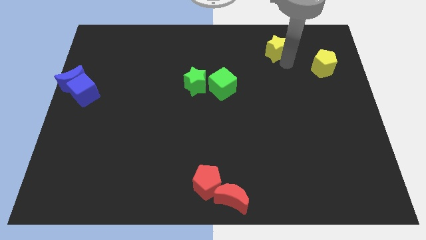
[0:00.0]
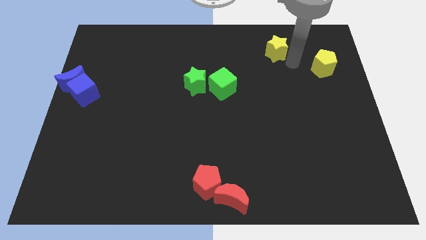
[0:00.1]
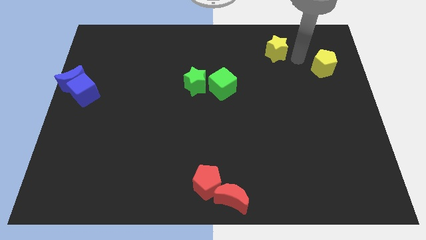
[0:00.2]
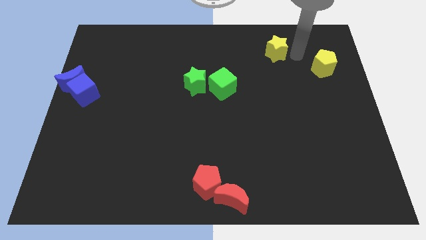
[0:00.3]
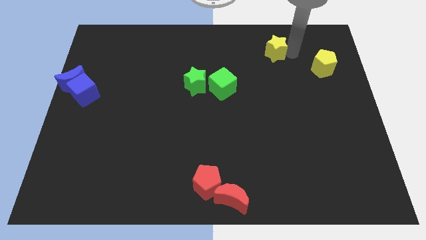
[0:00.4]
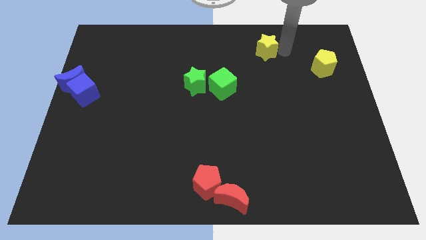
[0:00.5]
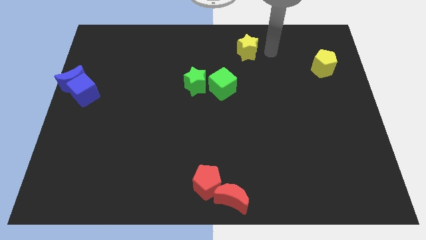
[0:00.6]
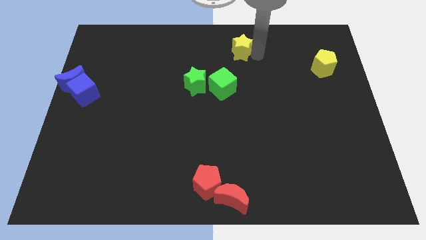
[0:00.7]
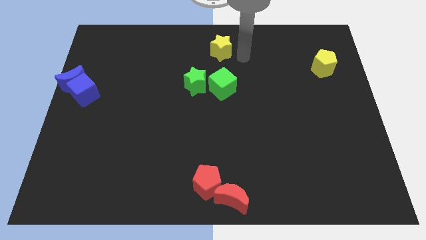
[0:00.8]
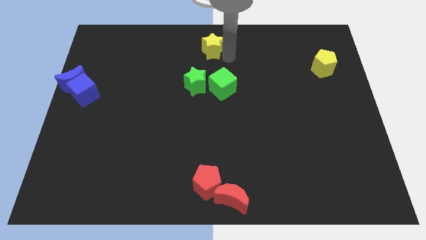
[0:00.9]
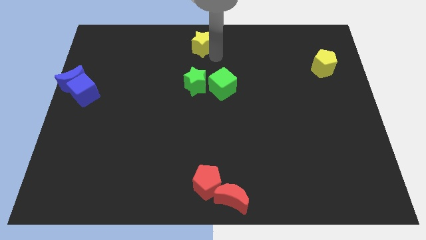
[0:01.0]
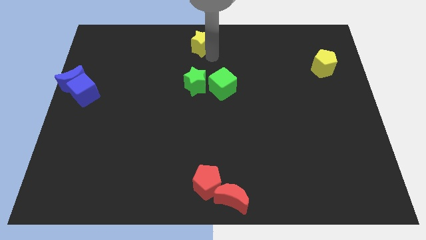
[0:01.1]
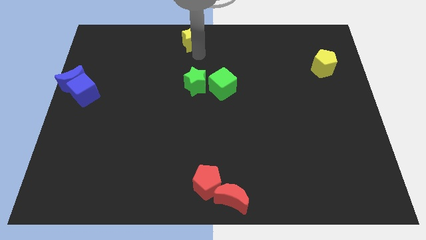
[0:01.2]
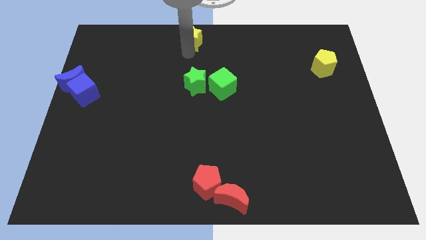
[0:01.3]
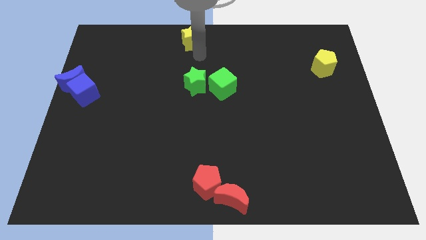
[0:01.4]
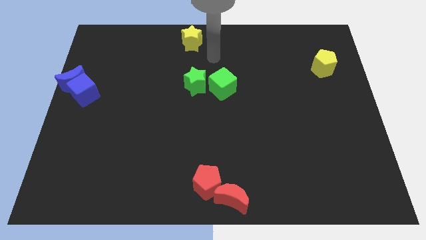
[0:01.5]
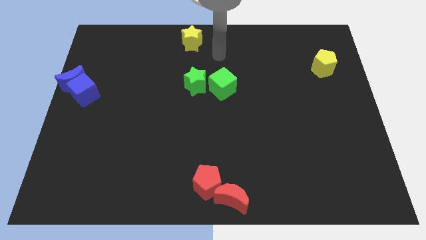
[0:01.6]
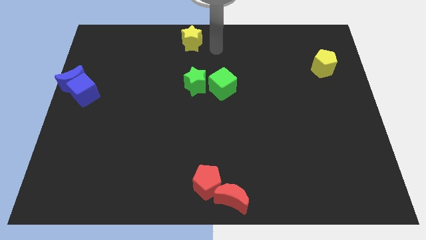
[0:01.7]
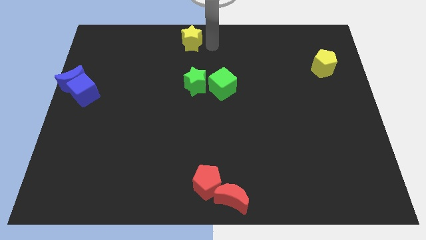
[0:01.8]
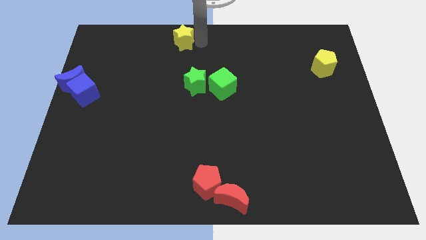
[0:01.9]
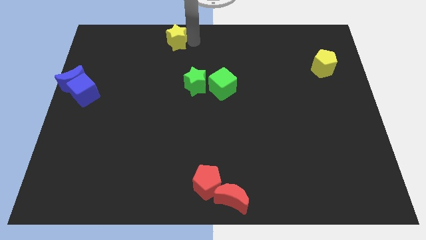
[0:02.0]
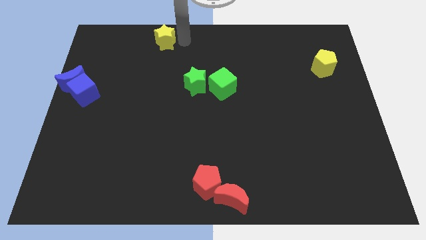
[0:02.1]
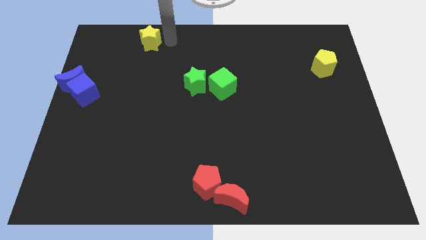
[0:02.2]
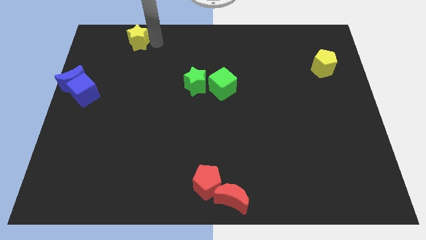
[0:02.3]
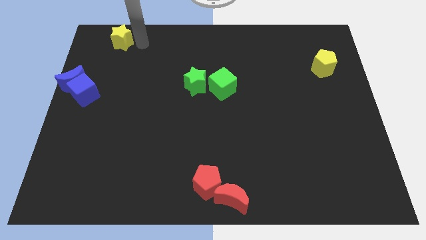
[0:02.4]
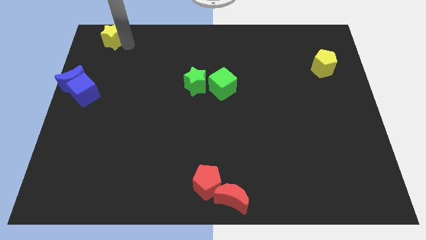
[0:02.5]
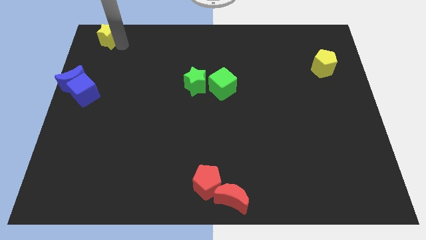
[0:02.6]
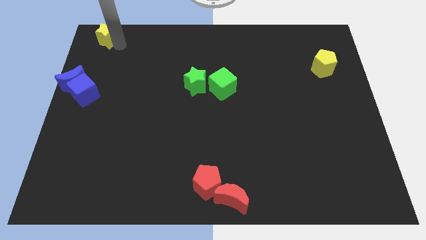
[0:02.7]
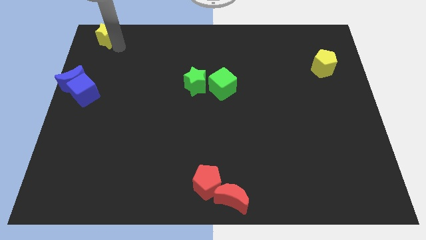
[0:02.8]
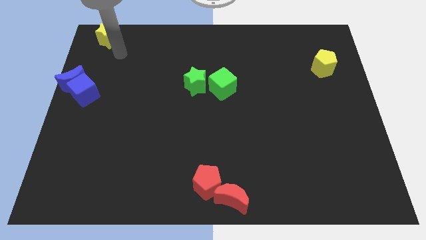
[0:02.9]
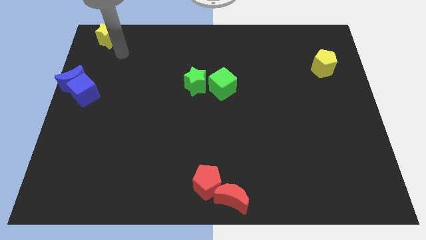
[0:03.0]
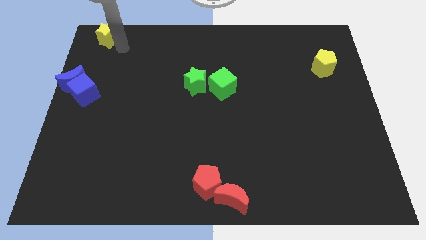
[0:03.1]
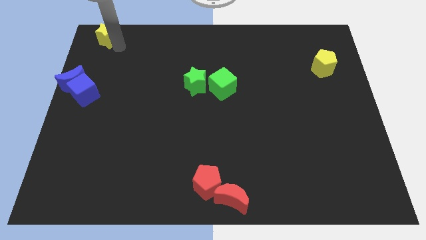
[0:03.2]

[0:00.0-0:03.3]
push the yellow star towards the top left of the board

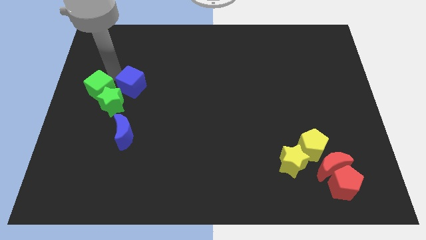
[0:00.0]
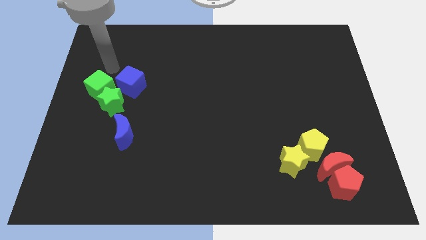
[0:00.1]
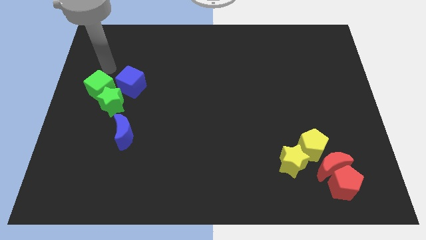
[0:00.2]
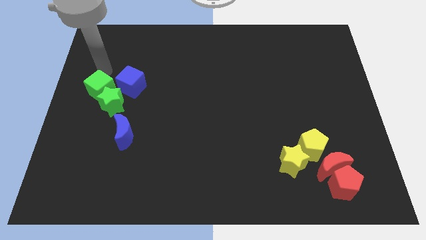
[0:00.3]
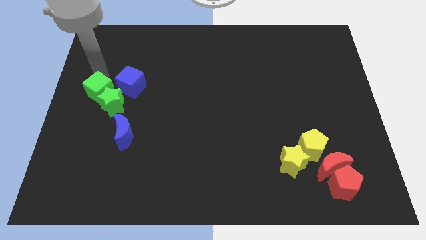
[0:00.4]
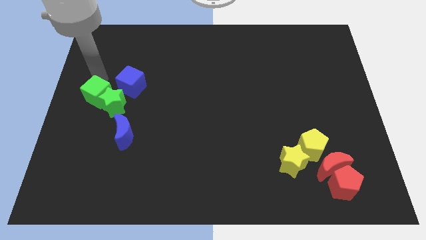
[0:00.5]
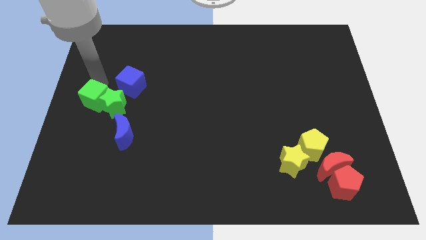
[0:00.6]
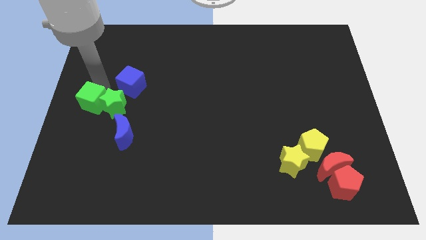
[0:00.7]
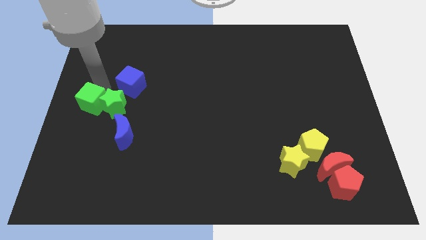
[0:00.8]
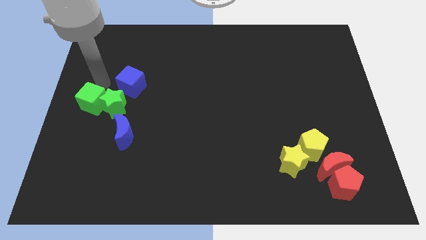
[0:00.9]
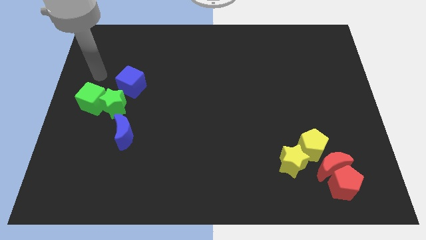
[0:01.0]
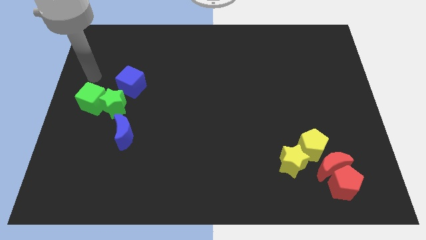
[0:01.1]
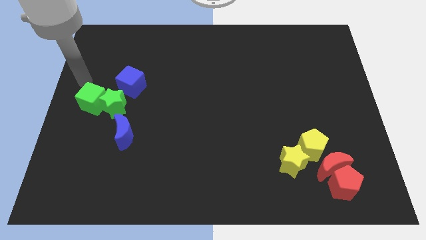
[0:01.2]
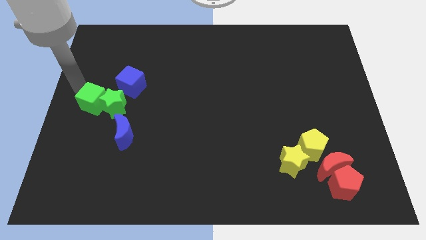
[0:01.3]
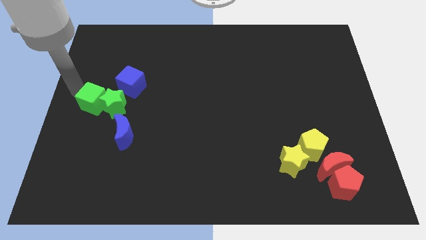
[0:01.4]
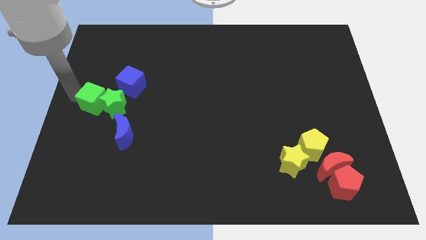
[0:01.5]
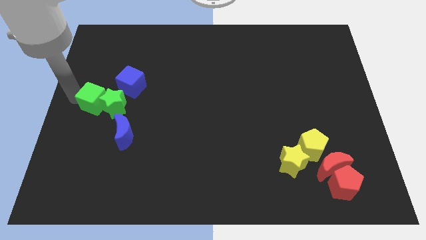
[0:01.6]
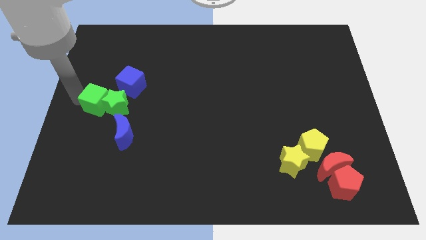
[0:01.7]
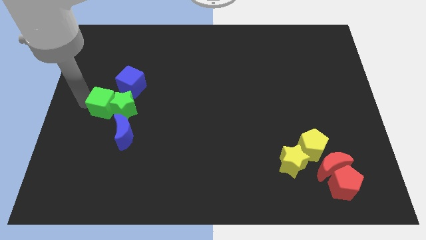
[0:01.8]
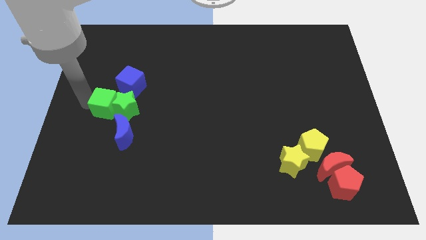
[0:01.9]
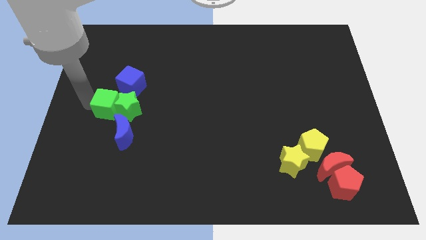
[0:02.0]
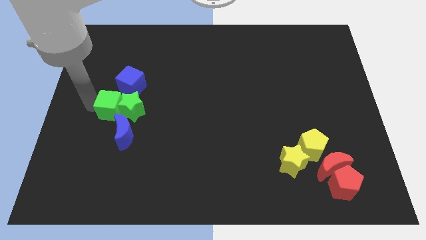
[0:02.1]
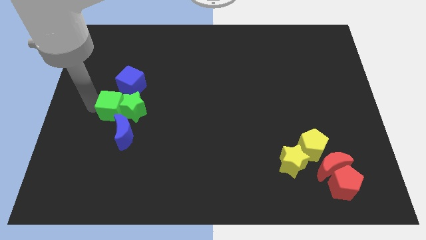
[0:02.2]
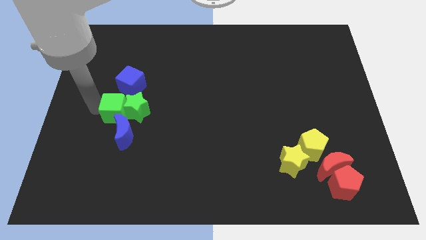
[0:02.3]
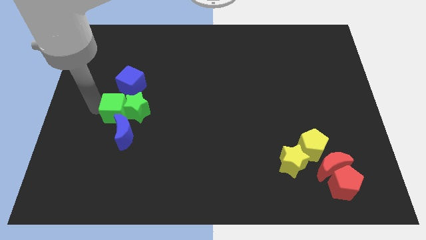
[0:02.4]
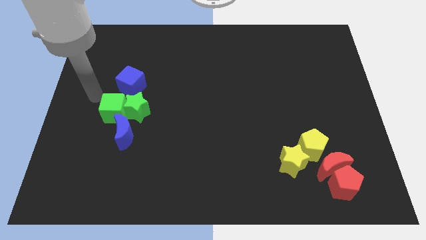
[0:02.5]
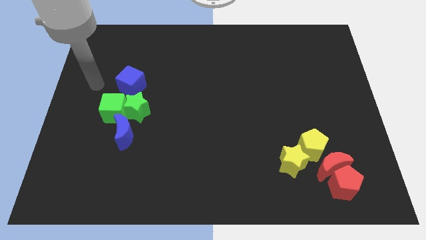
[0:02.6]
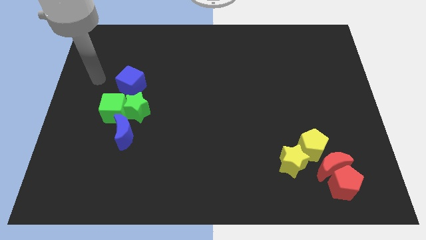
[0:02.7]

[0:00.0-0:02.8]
move the green cube and green star above the blue crescent

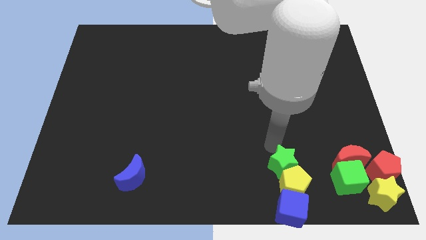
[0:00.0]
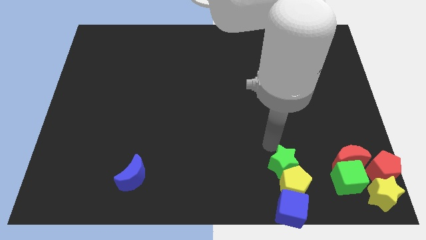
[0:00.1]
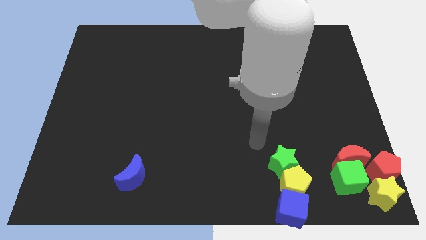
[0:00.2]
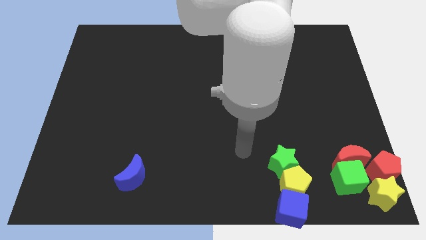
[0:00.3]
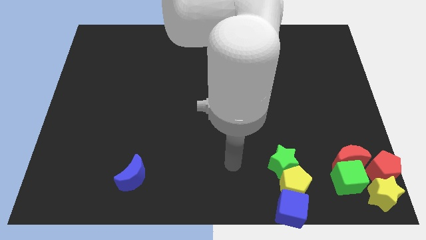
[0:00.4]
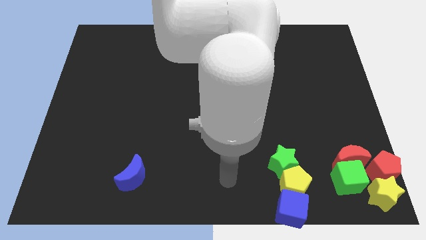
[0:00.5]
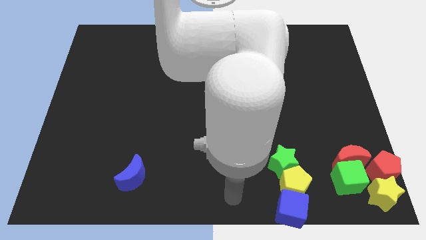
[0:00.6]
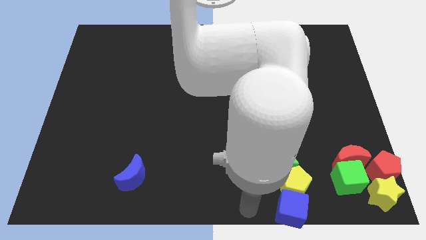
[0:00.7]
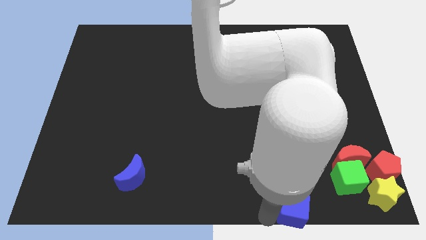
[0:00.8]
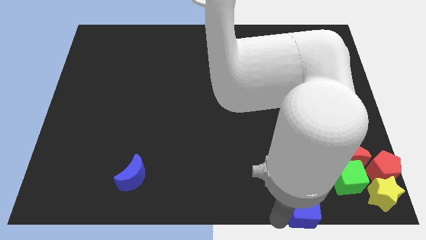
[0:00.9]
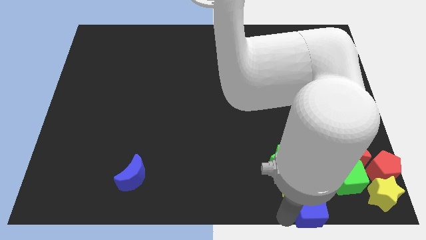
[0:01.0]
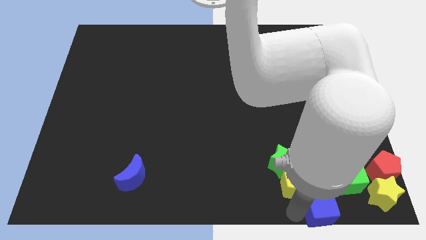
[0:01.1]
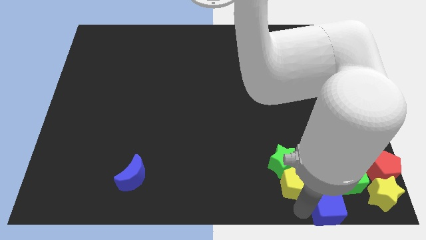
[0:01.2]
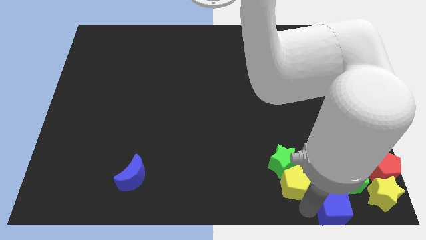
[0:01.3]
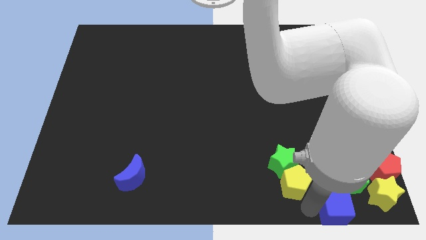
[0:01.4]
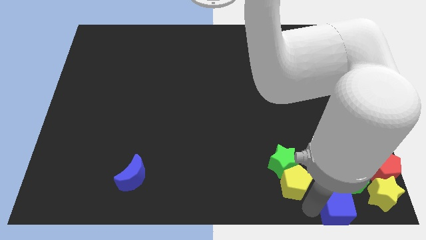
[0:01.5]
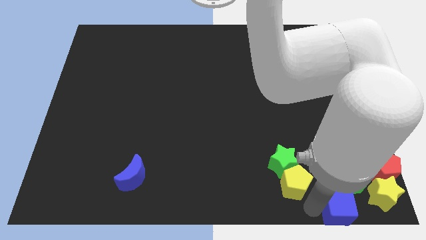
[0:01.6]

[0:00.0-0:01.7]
move the blue cube towards the right side

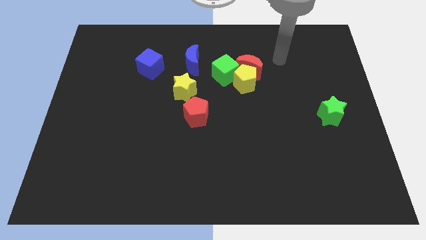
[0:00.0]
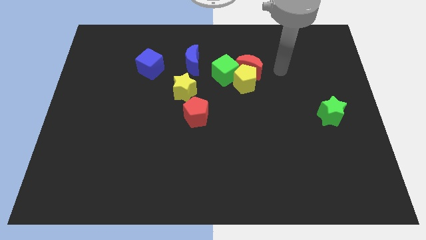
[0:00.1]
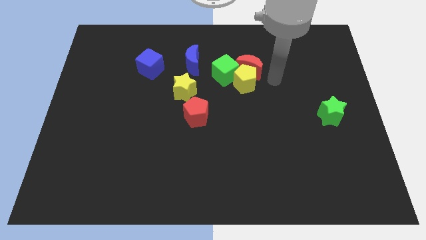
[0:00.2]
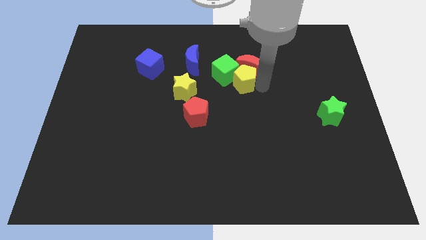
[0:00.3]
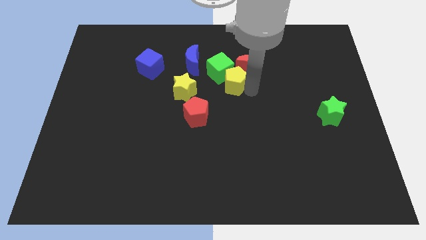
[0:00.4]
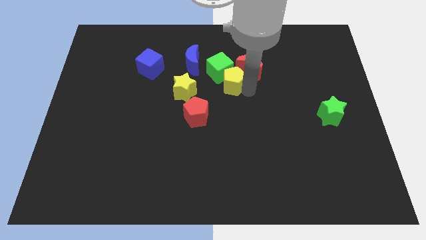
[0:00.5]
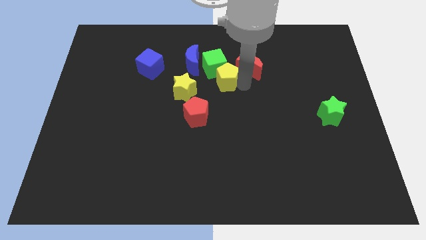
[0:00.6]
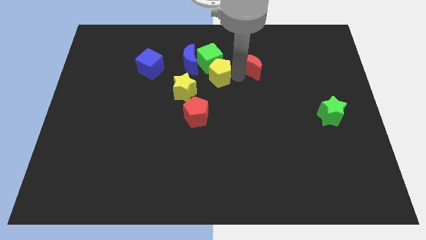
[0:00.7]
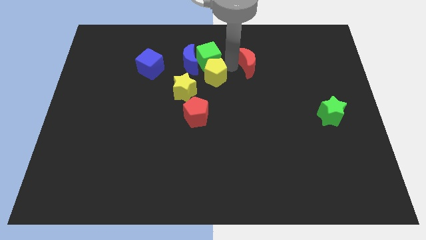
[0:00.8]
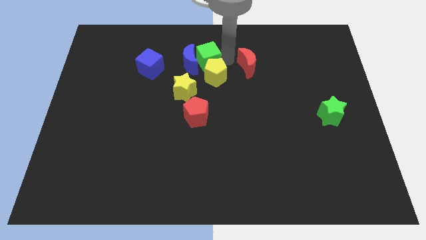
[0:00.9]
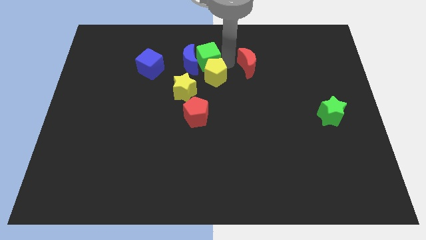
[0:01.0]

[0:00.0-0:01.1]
separate the green cube and yellow pentagon from the red moon
